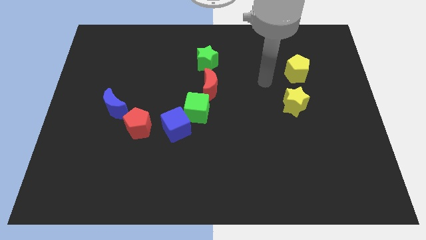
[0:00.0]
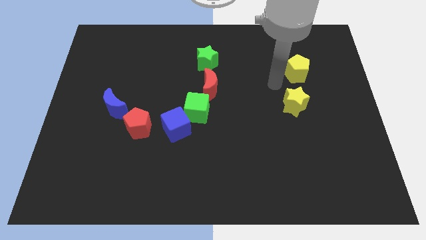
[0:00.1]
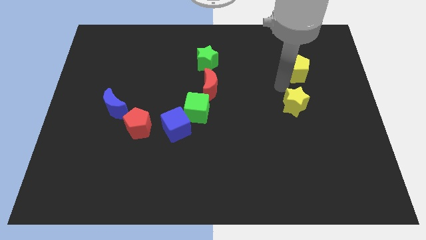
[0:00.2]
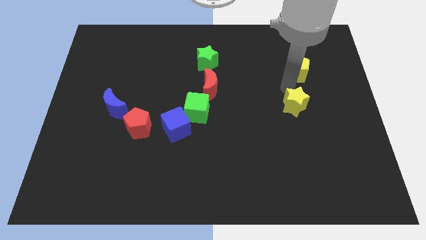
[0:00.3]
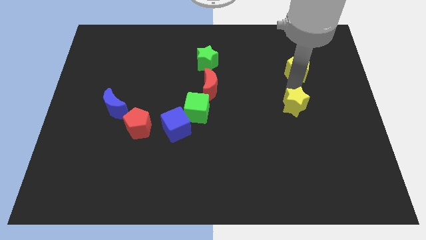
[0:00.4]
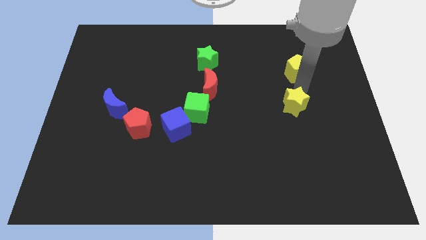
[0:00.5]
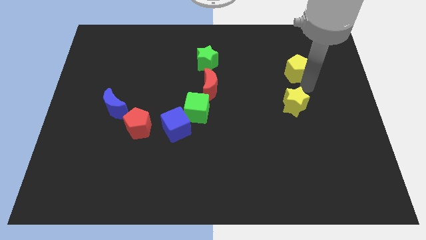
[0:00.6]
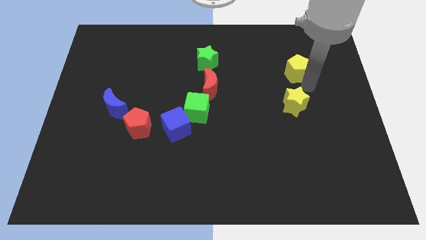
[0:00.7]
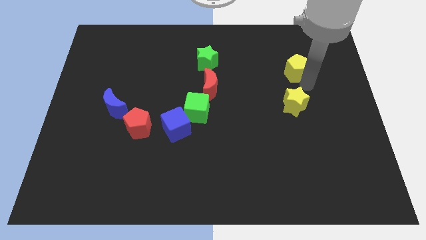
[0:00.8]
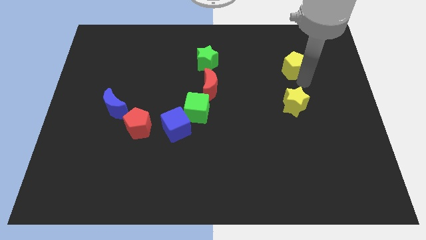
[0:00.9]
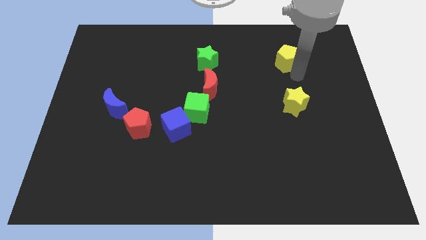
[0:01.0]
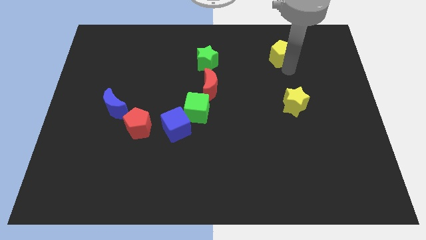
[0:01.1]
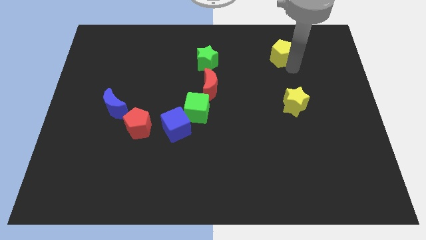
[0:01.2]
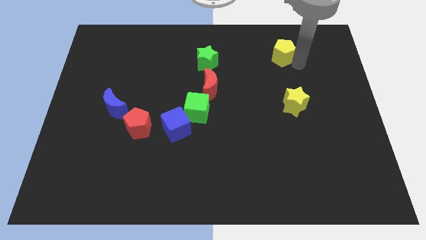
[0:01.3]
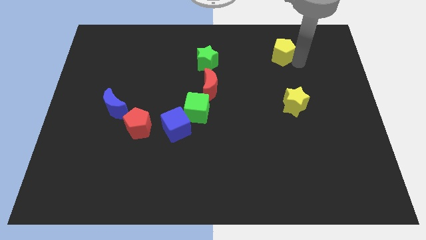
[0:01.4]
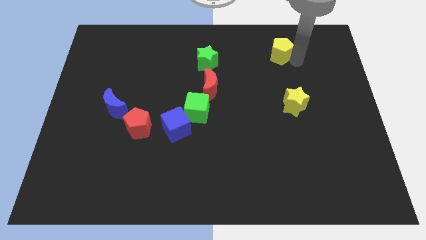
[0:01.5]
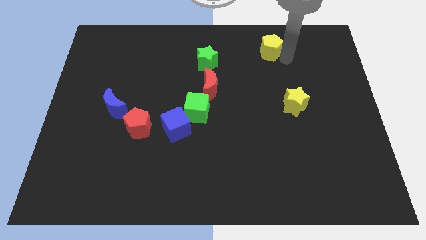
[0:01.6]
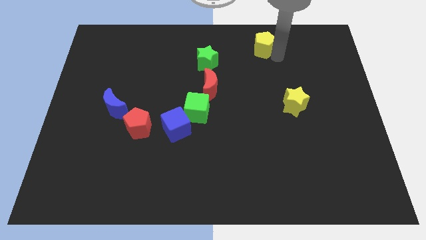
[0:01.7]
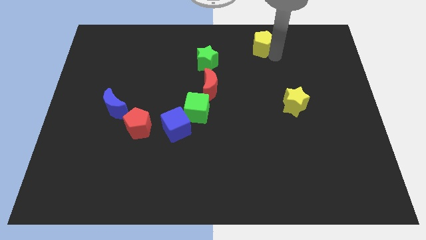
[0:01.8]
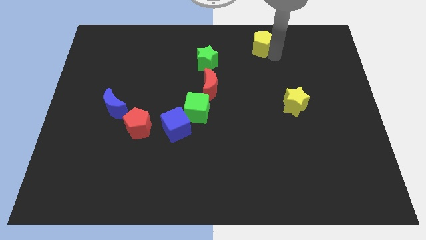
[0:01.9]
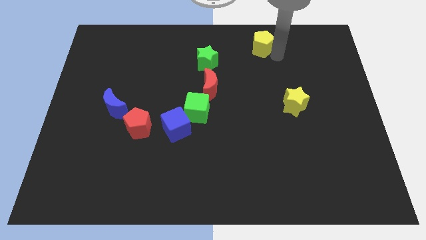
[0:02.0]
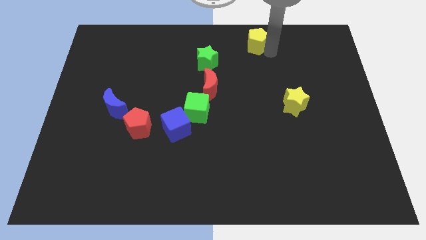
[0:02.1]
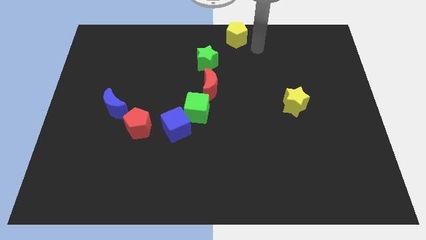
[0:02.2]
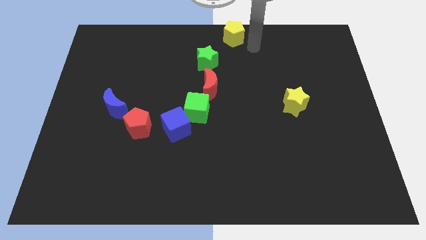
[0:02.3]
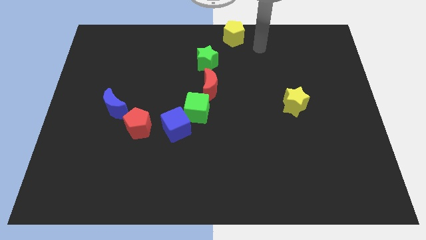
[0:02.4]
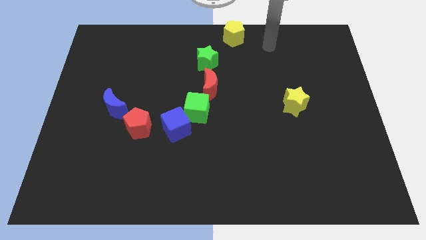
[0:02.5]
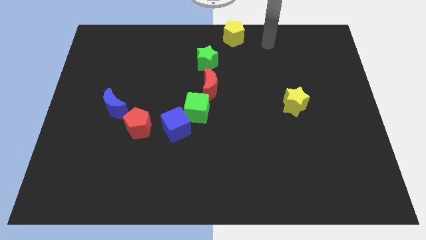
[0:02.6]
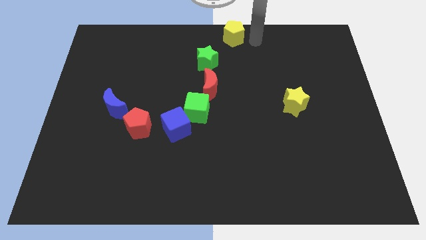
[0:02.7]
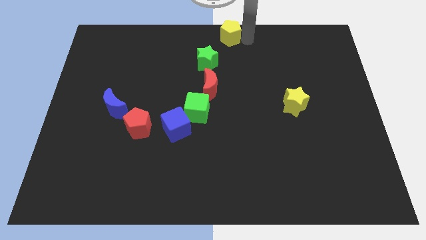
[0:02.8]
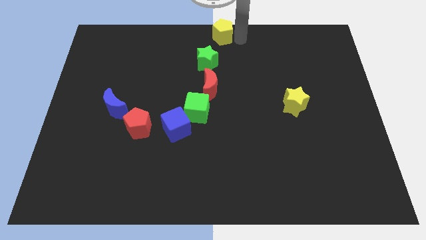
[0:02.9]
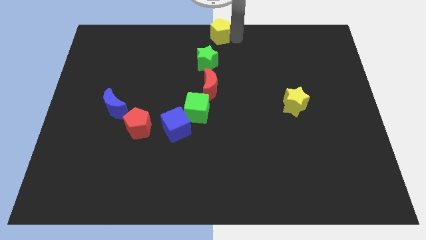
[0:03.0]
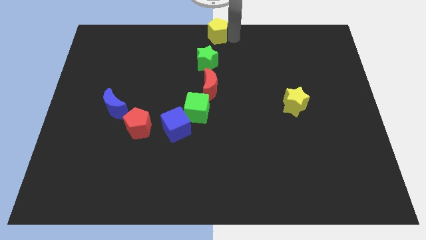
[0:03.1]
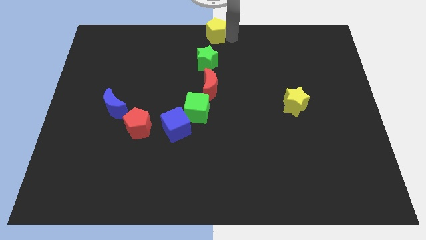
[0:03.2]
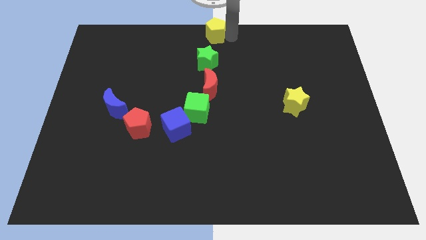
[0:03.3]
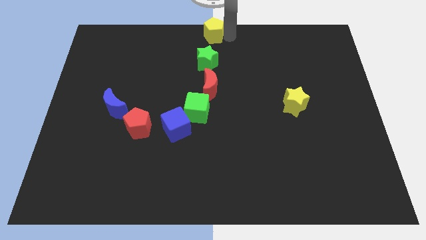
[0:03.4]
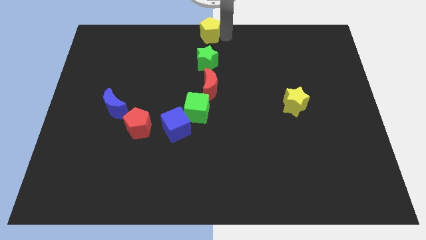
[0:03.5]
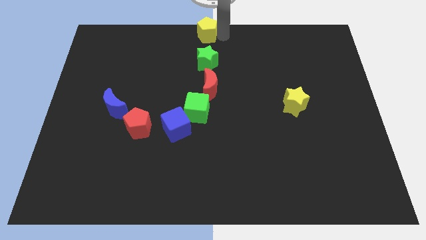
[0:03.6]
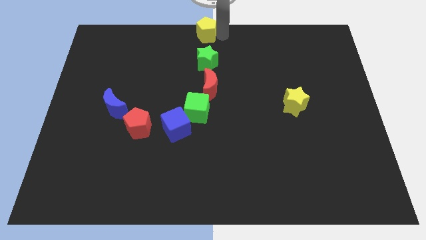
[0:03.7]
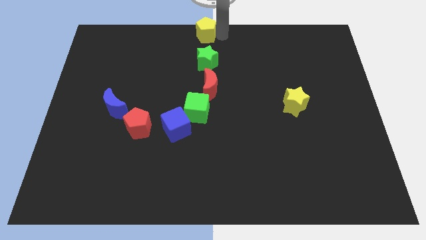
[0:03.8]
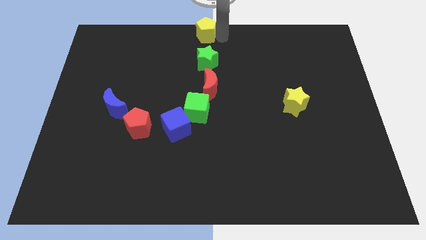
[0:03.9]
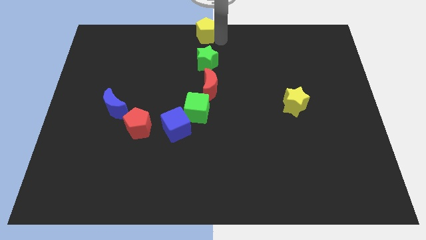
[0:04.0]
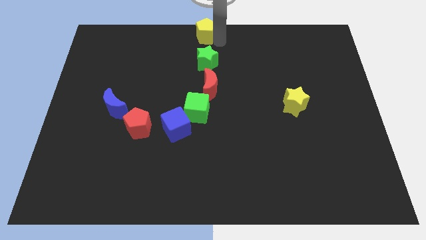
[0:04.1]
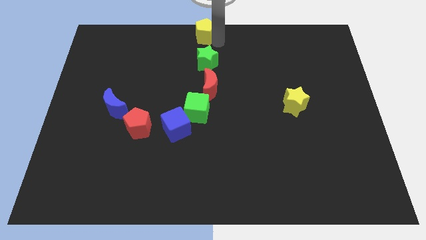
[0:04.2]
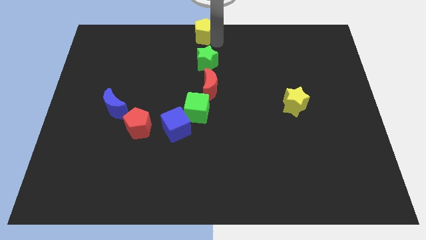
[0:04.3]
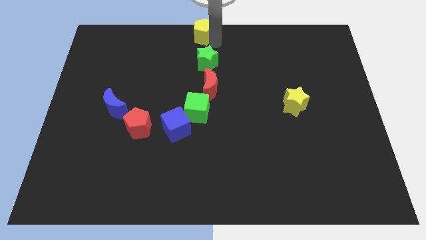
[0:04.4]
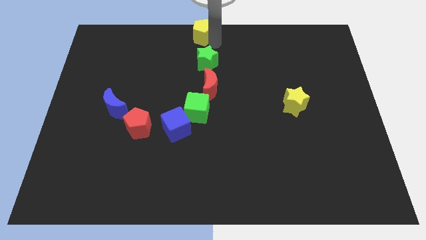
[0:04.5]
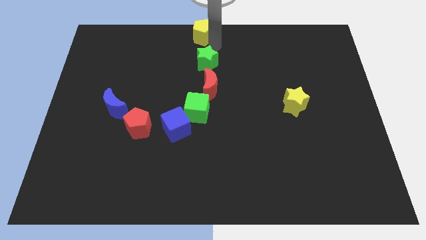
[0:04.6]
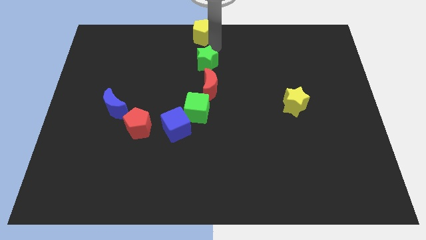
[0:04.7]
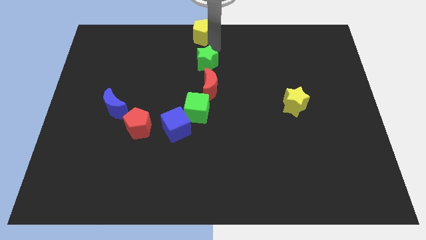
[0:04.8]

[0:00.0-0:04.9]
push the yellow pentagon top of the green star

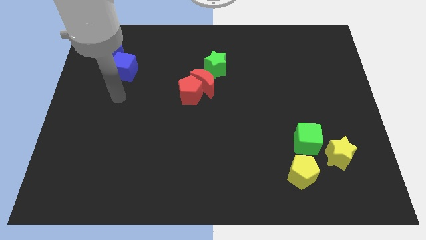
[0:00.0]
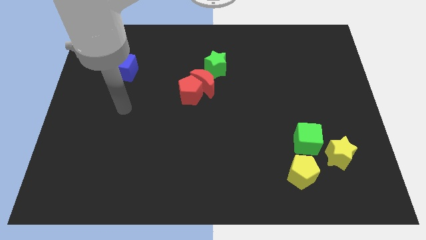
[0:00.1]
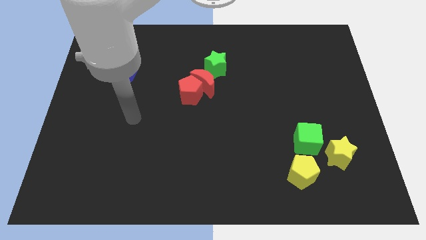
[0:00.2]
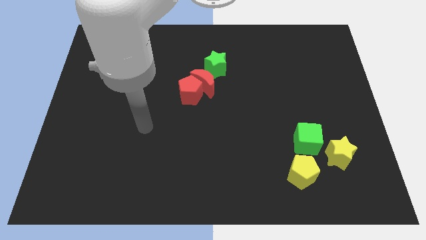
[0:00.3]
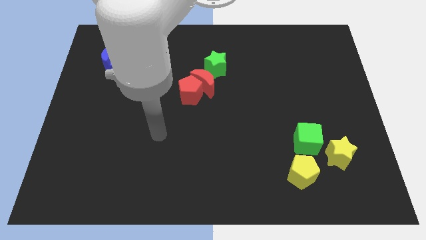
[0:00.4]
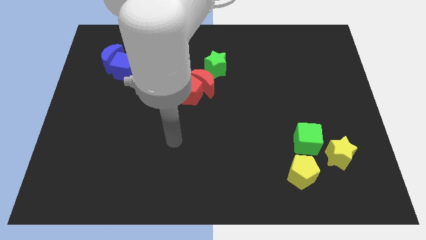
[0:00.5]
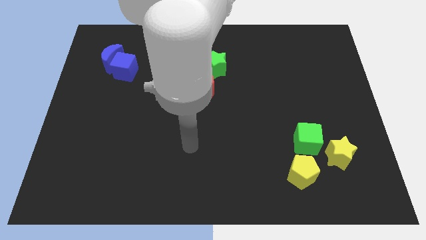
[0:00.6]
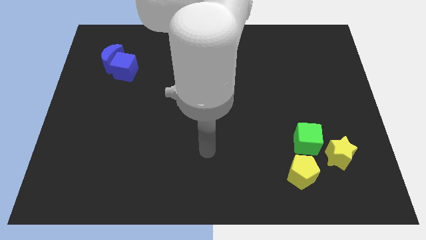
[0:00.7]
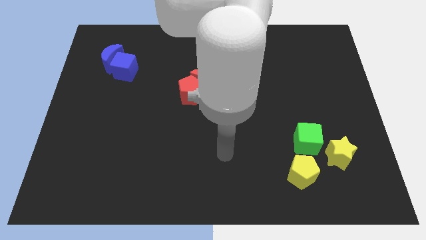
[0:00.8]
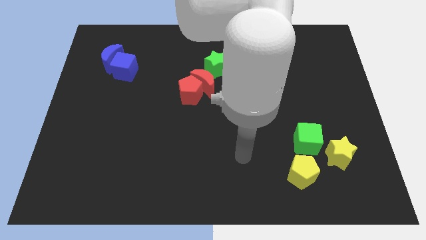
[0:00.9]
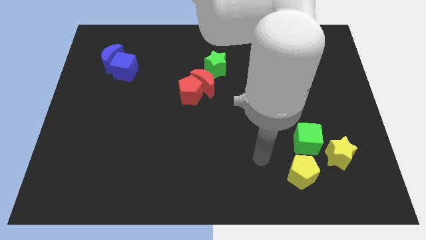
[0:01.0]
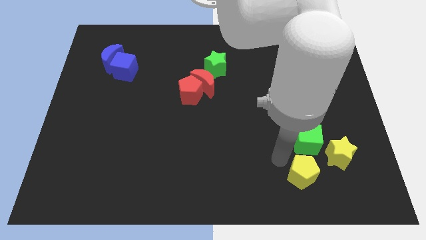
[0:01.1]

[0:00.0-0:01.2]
point the arm to the left of the yellow pentagon

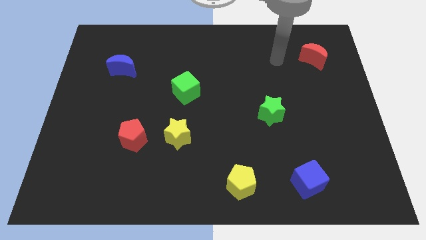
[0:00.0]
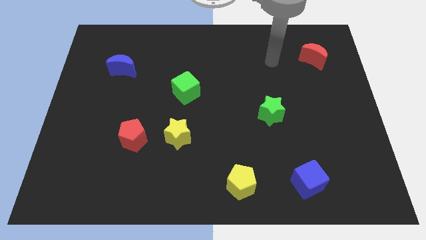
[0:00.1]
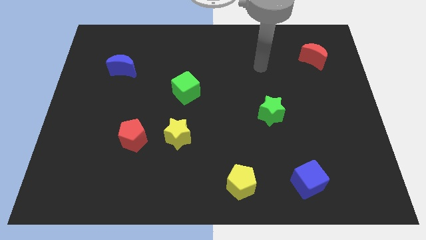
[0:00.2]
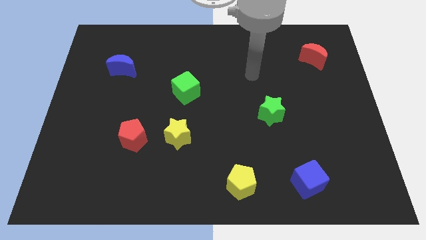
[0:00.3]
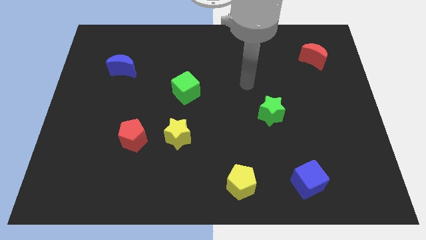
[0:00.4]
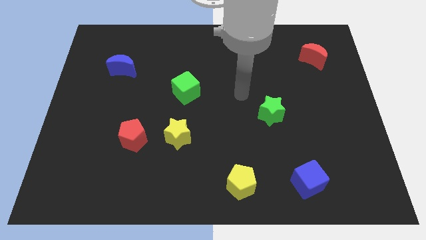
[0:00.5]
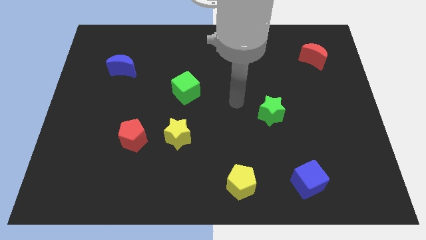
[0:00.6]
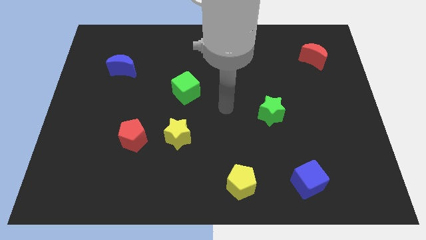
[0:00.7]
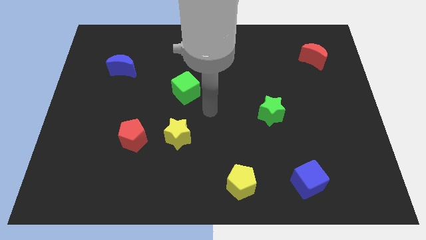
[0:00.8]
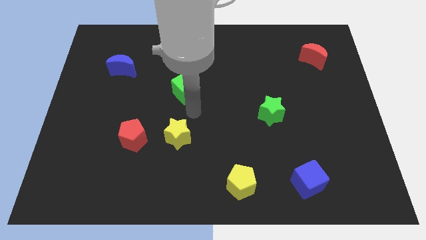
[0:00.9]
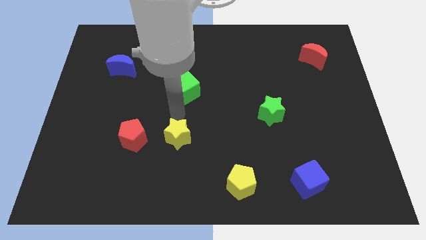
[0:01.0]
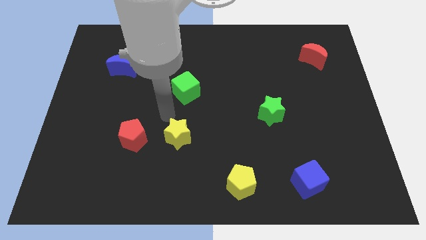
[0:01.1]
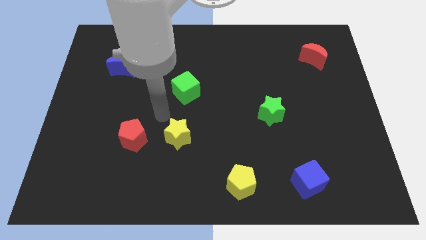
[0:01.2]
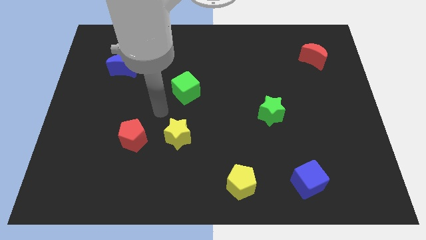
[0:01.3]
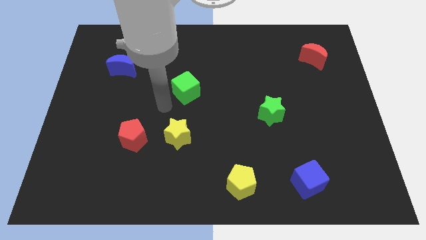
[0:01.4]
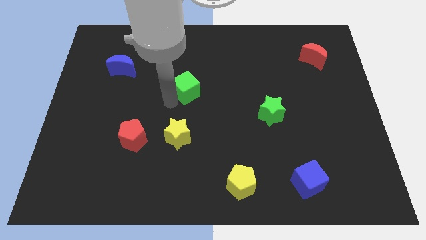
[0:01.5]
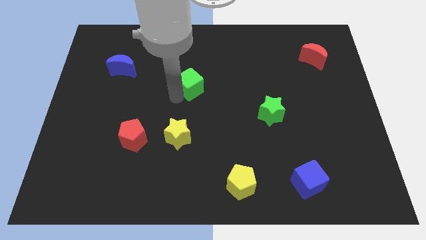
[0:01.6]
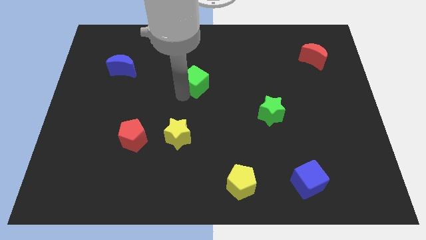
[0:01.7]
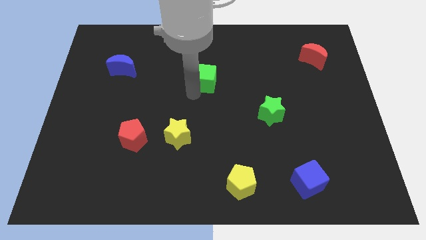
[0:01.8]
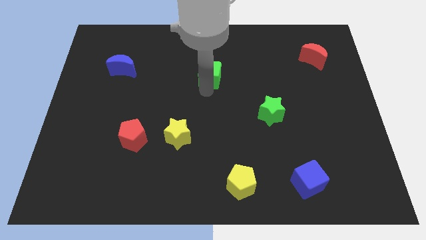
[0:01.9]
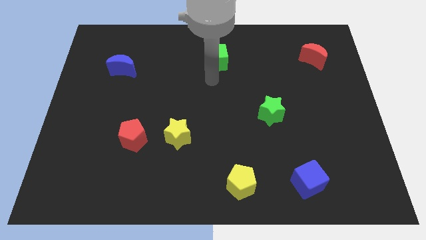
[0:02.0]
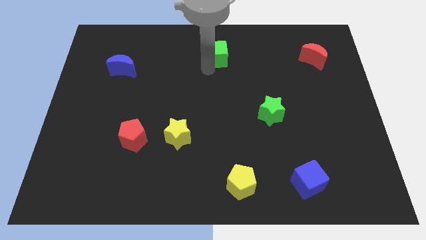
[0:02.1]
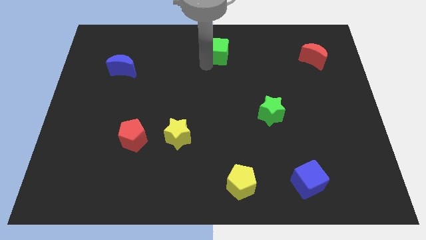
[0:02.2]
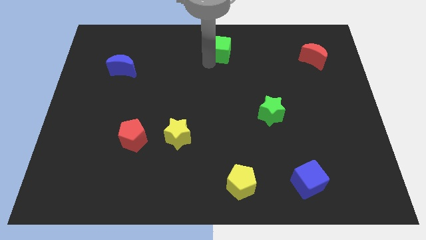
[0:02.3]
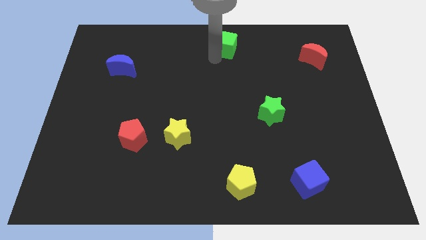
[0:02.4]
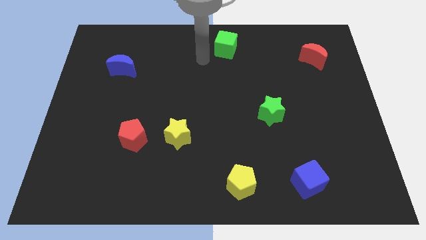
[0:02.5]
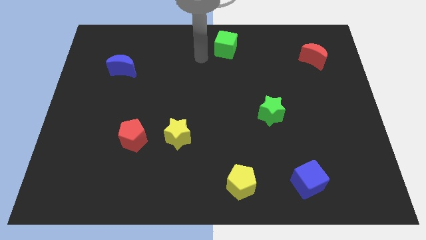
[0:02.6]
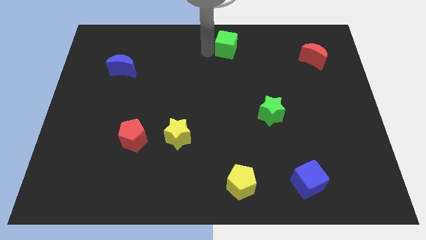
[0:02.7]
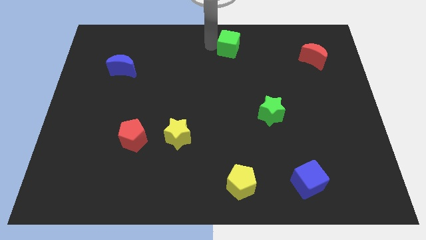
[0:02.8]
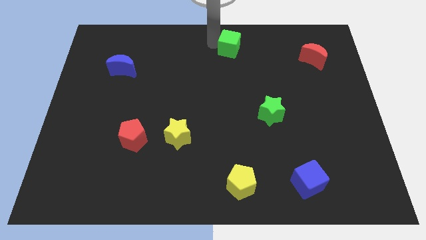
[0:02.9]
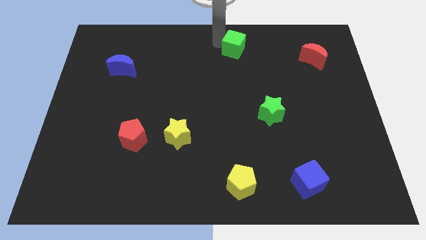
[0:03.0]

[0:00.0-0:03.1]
slide the green cube at the top center of the board
